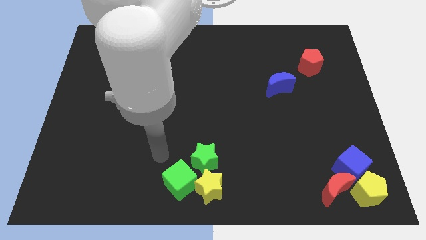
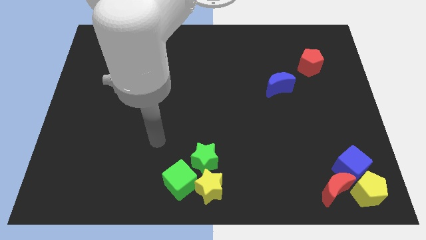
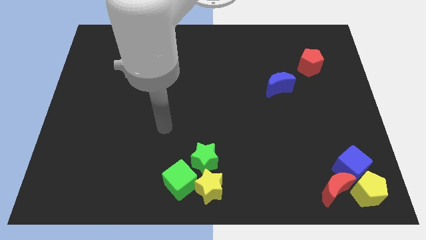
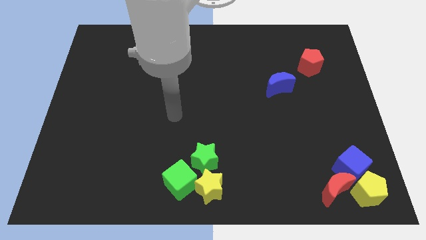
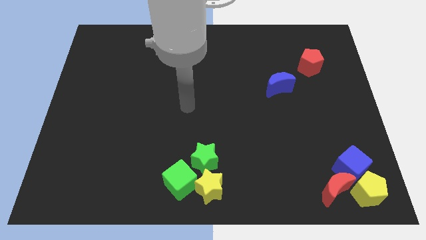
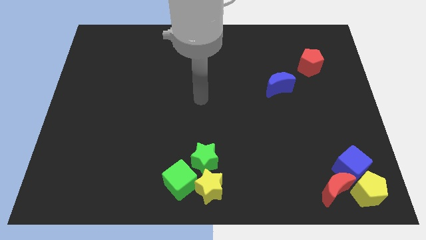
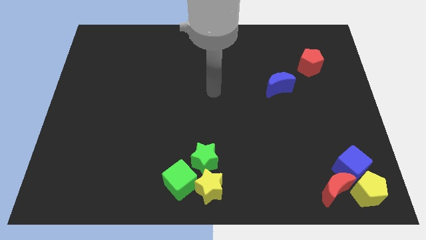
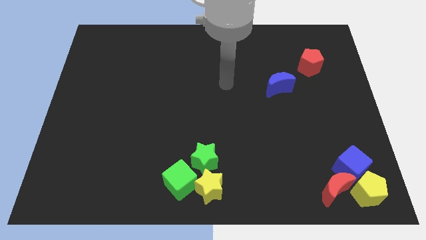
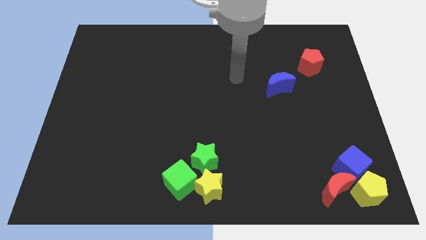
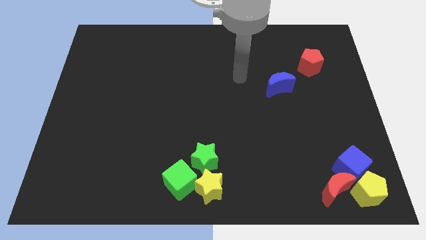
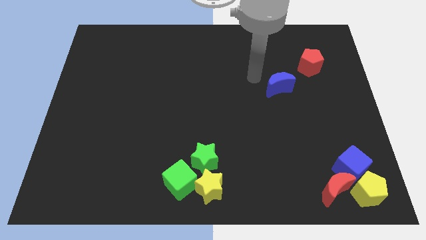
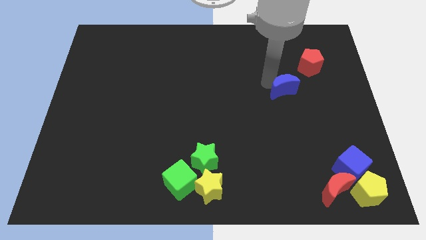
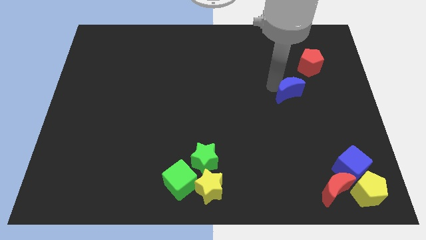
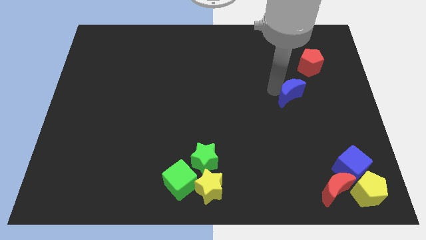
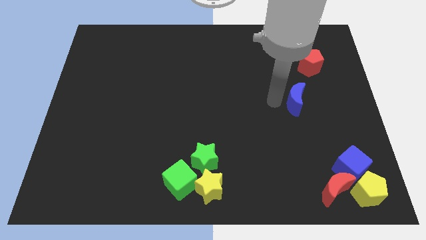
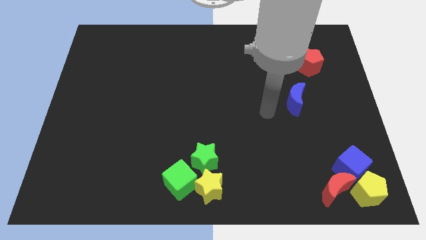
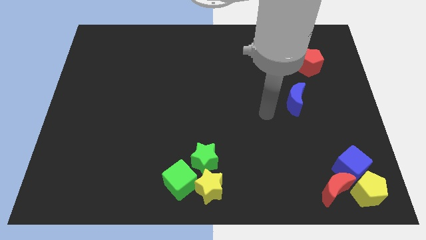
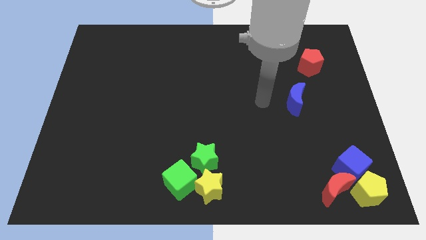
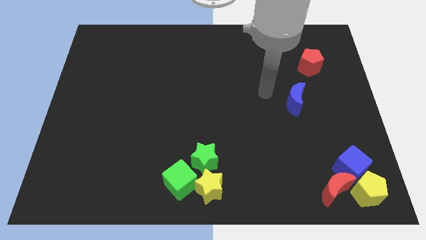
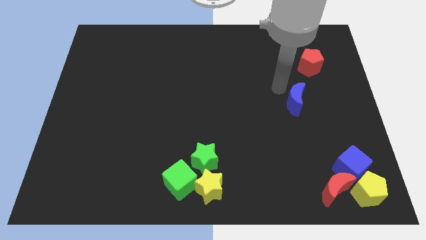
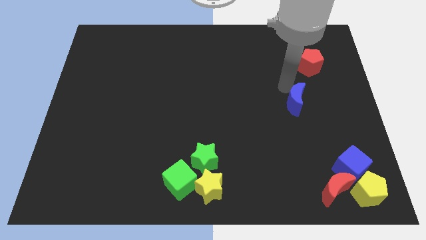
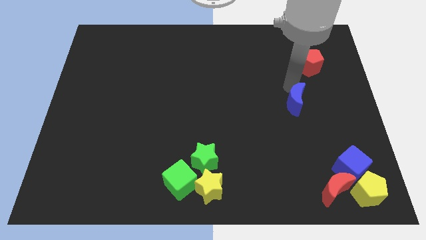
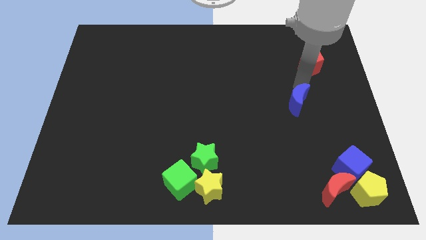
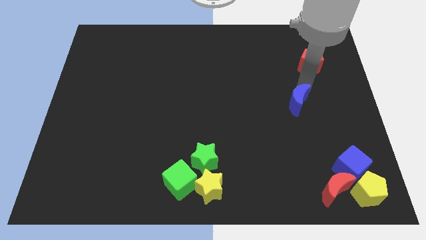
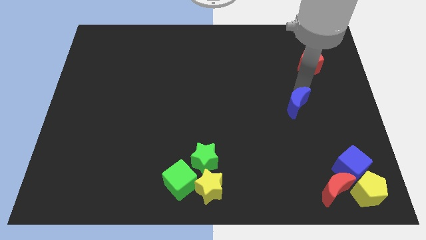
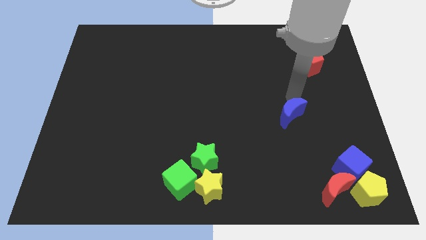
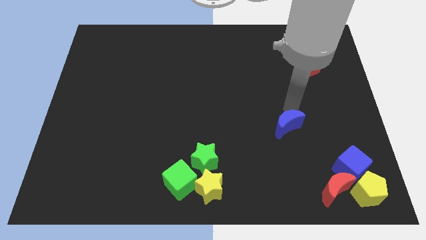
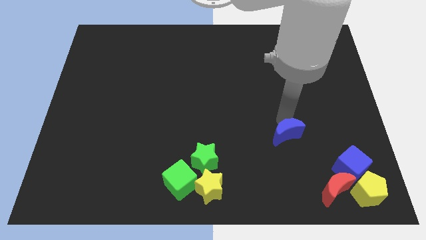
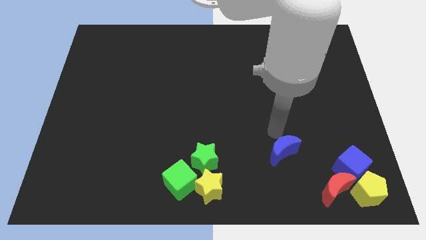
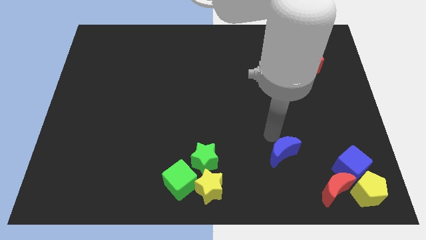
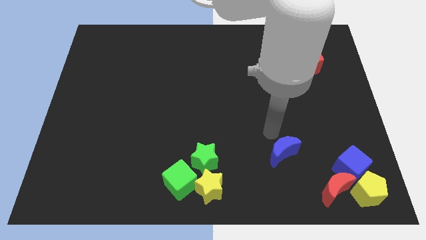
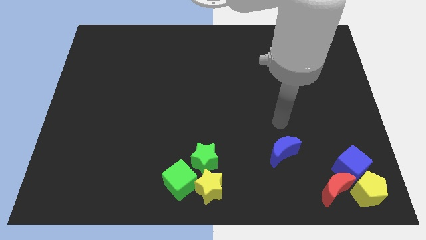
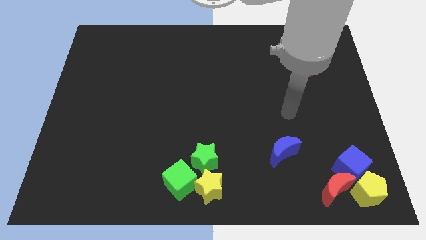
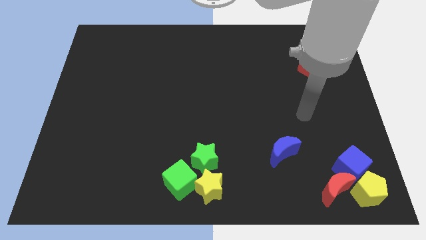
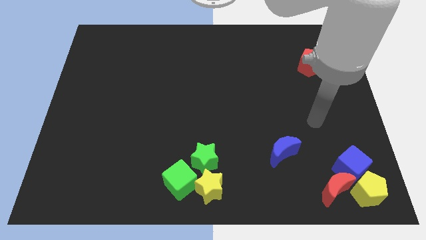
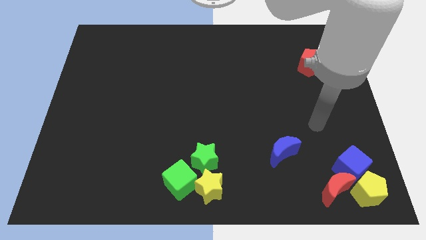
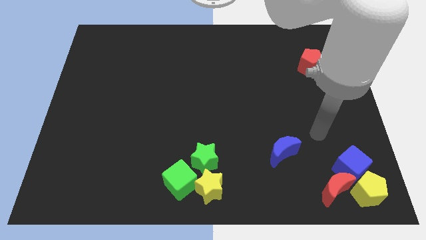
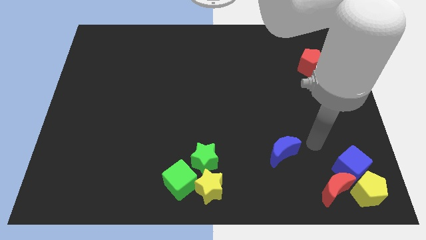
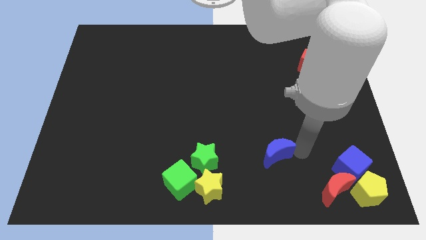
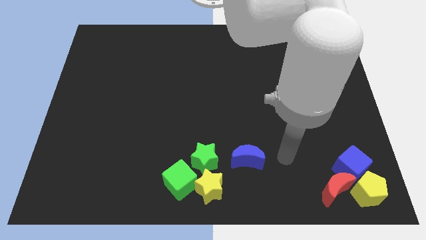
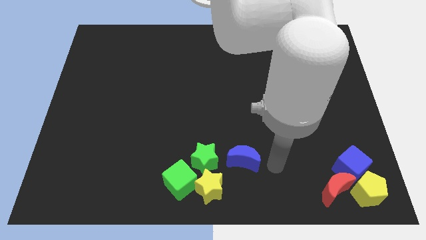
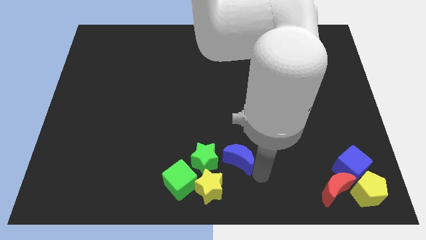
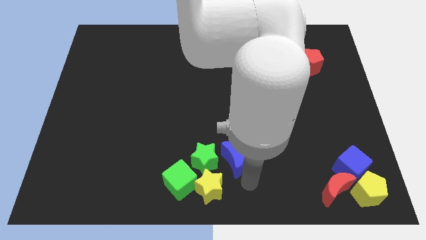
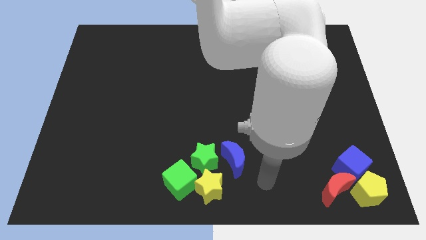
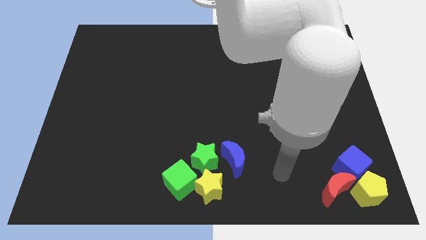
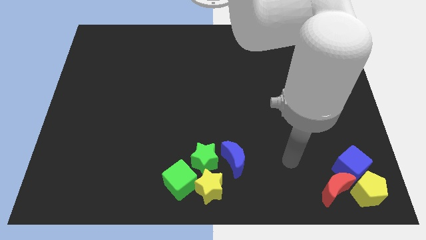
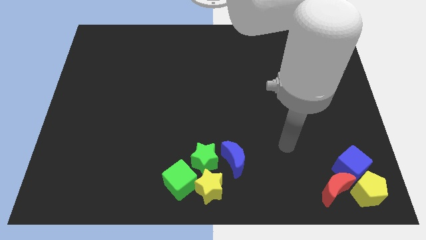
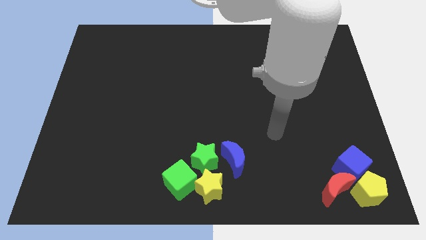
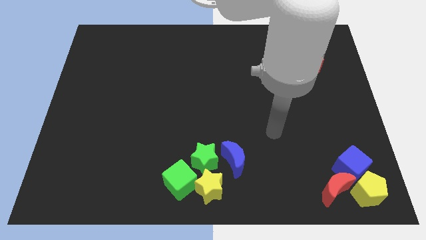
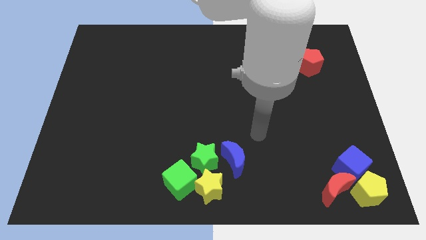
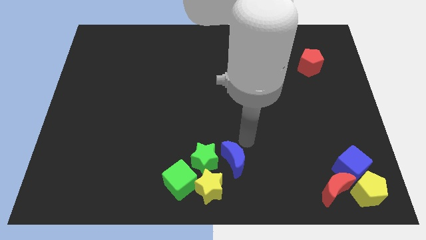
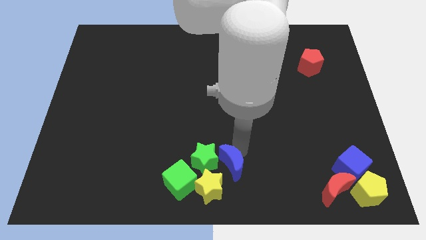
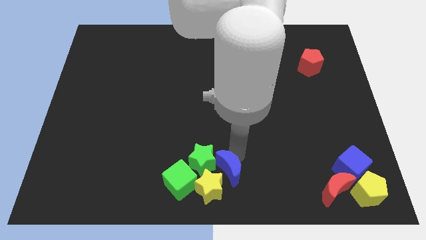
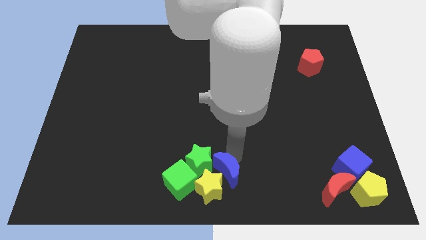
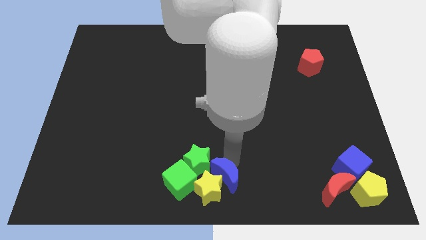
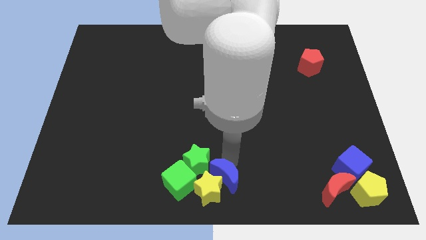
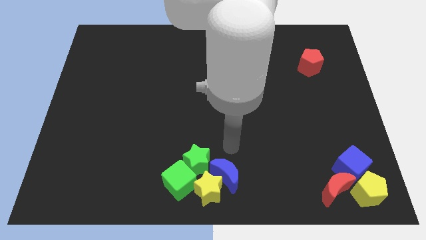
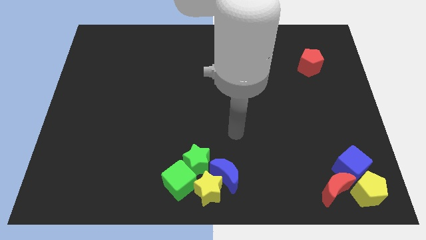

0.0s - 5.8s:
push the blue crescent into the green star

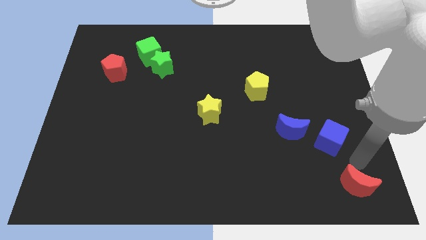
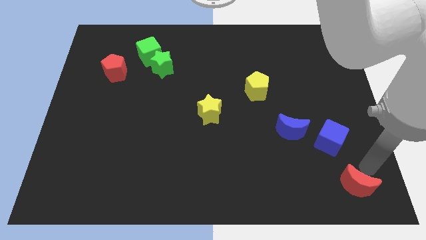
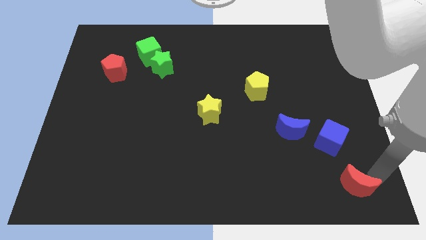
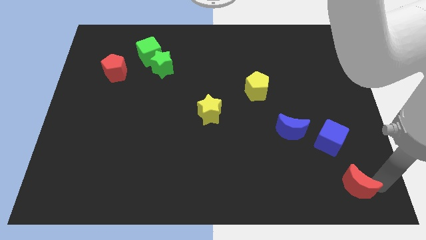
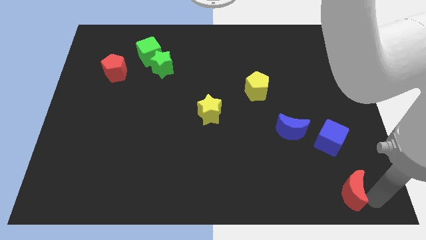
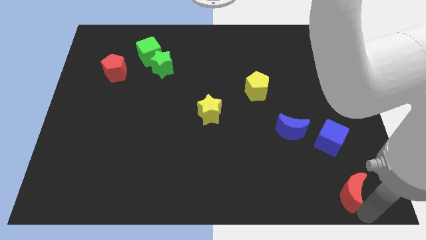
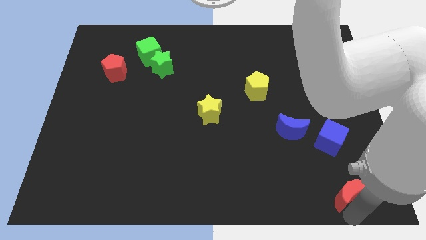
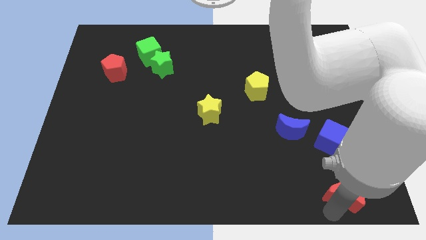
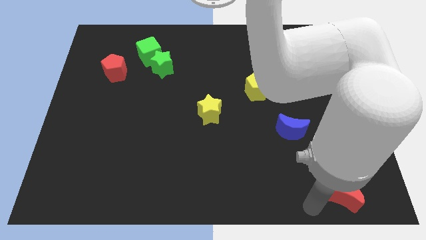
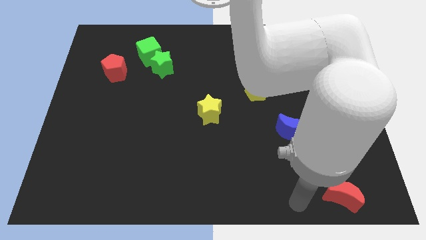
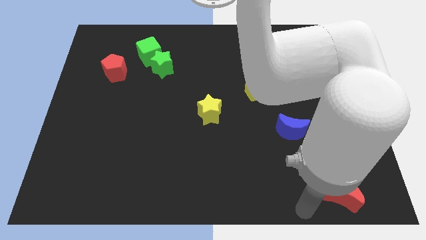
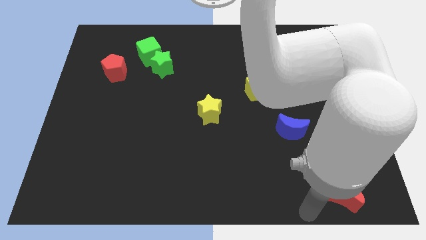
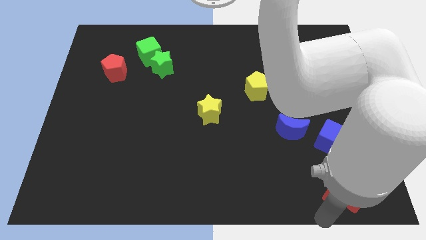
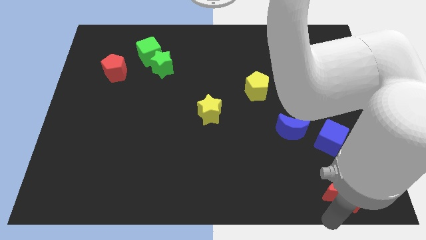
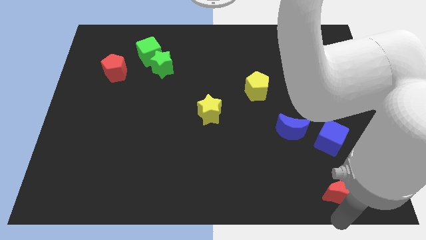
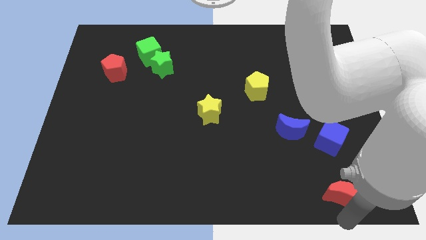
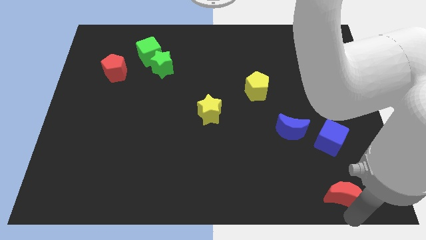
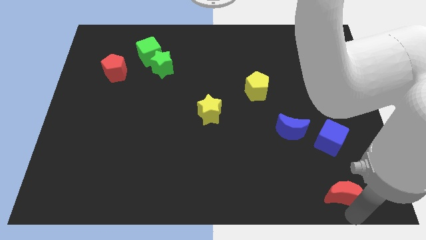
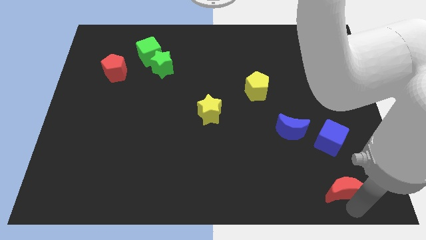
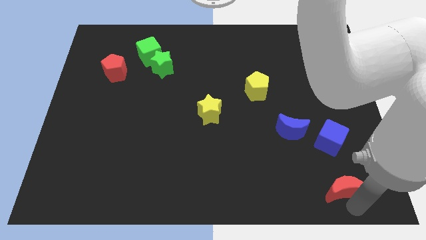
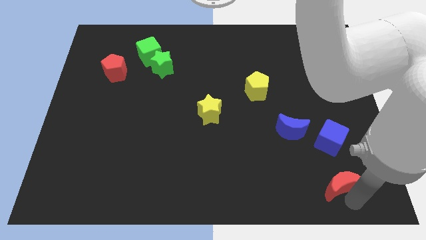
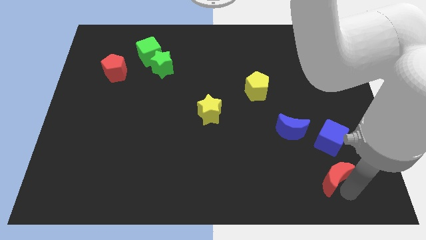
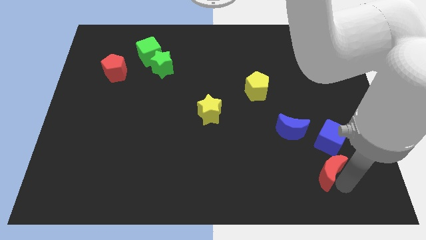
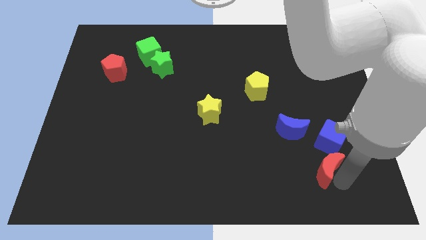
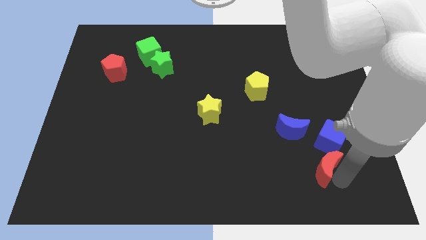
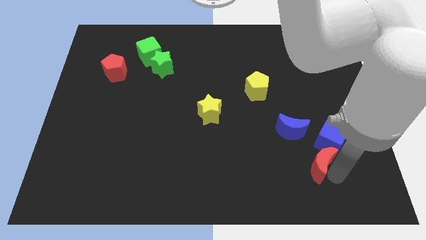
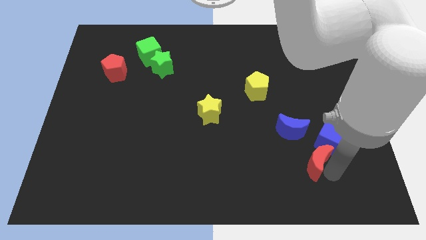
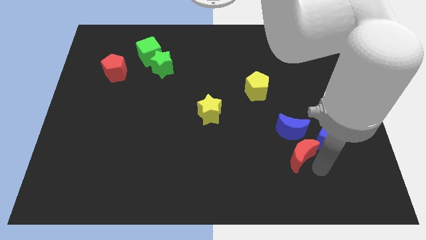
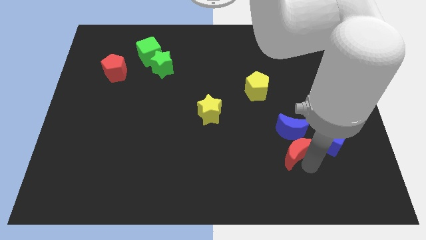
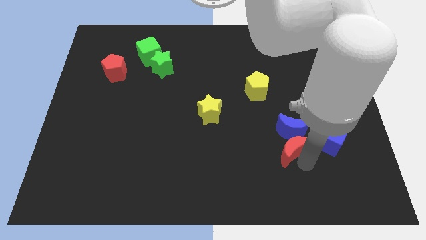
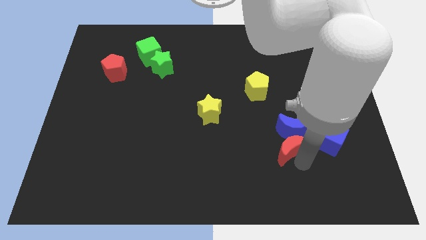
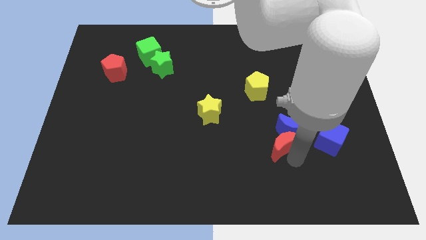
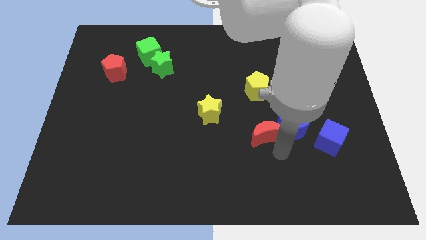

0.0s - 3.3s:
move the red moon close to the left side of the blue moon
